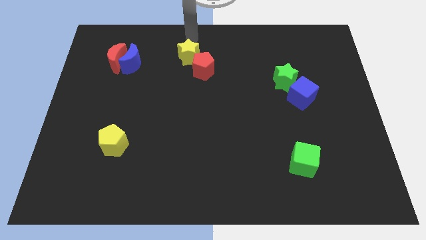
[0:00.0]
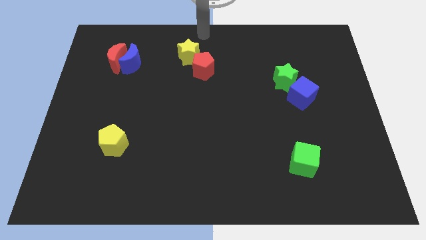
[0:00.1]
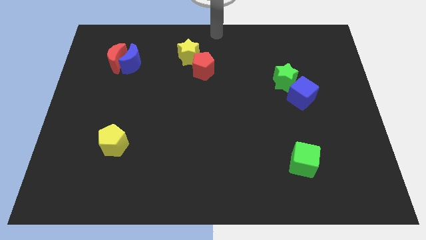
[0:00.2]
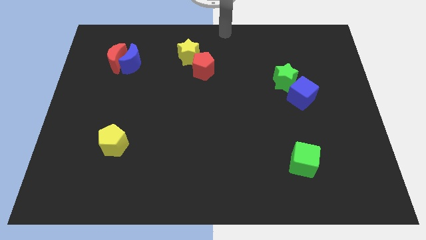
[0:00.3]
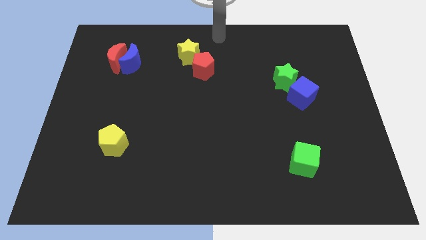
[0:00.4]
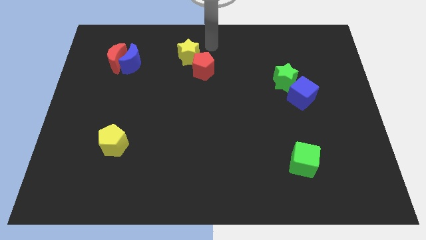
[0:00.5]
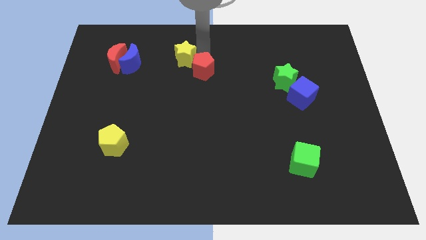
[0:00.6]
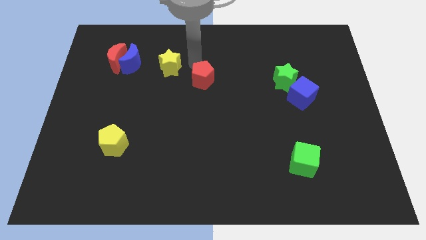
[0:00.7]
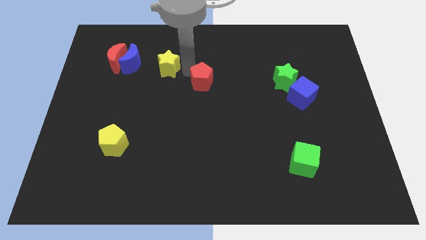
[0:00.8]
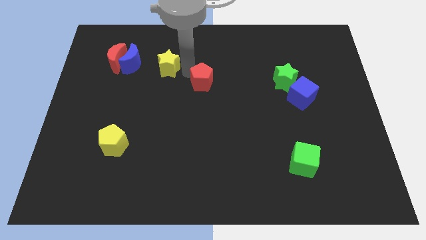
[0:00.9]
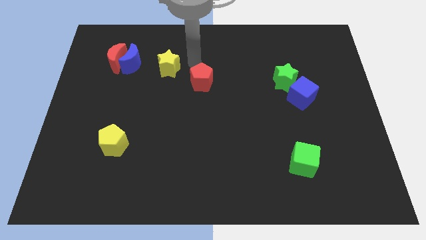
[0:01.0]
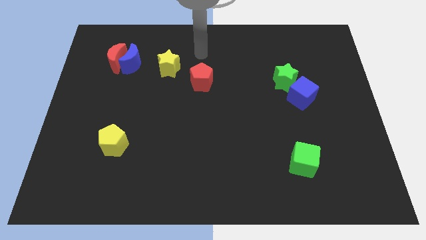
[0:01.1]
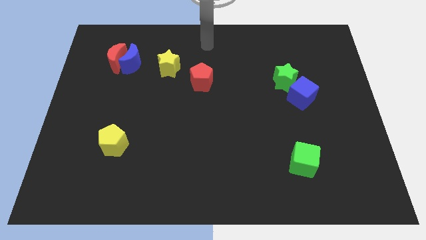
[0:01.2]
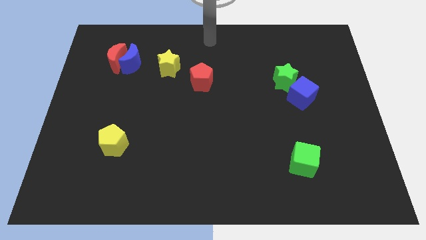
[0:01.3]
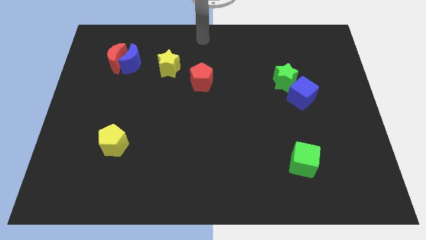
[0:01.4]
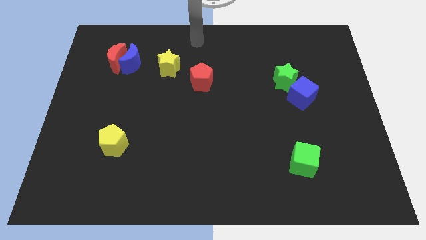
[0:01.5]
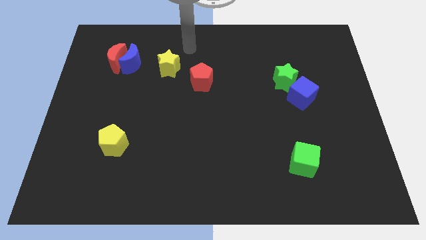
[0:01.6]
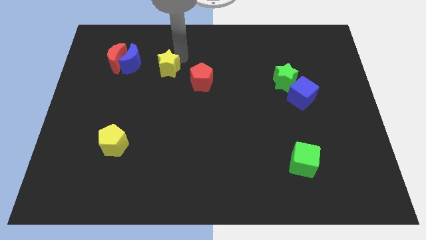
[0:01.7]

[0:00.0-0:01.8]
separate yellow star and the red pentagon from each other

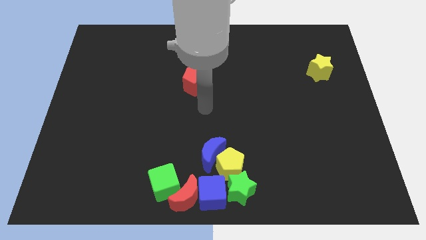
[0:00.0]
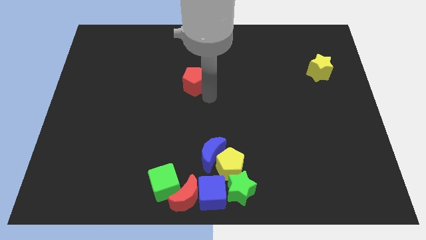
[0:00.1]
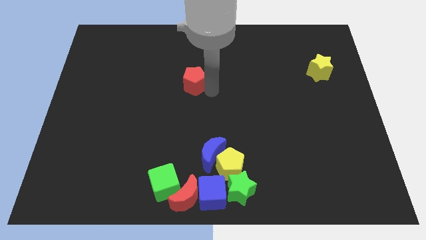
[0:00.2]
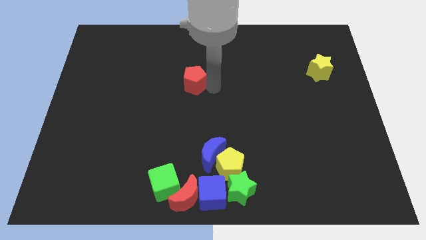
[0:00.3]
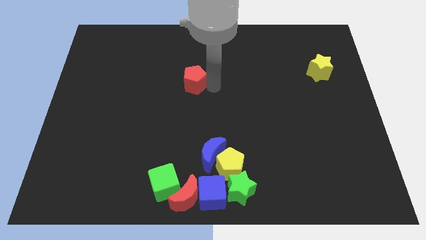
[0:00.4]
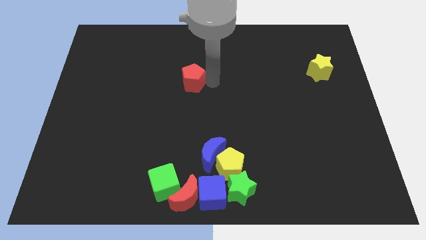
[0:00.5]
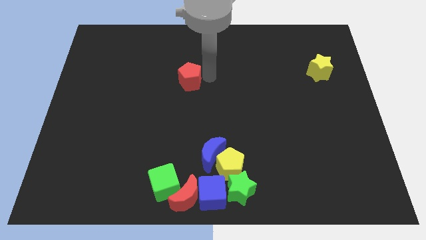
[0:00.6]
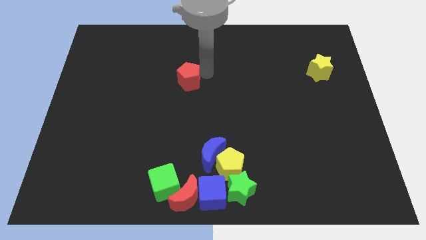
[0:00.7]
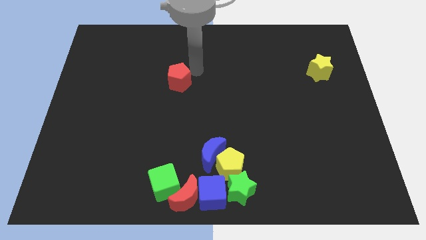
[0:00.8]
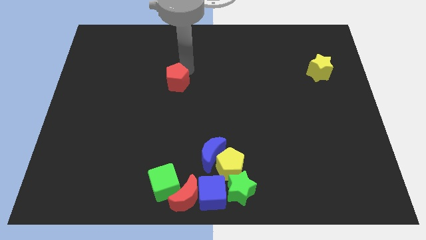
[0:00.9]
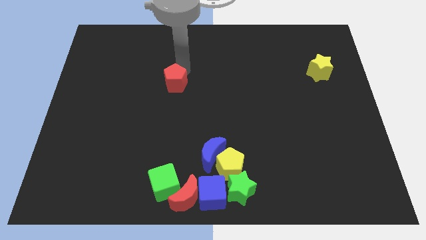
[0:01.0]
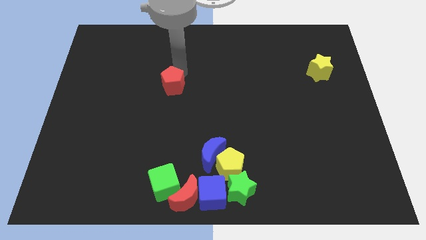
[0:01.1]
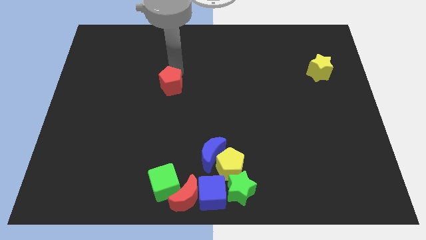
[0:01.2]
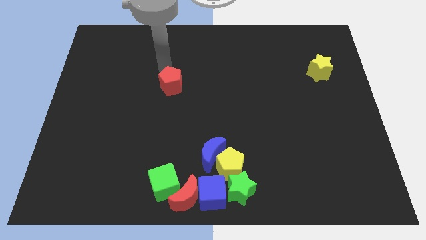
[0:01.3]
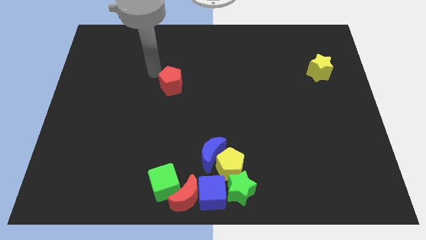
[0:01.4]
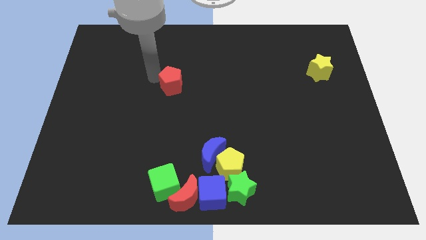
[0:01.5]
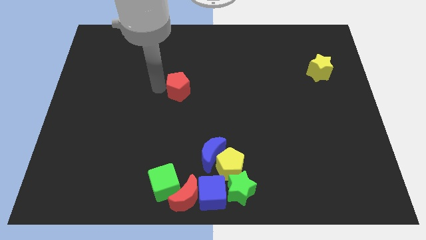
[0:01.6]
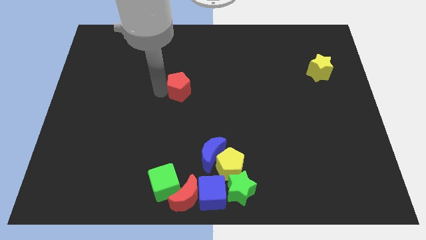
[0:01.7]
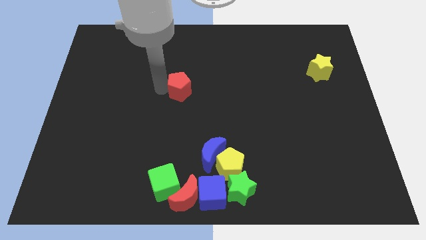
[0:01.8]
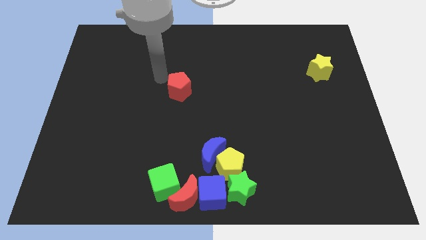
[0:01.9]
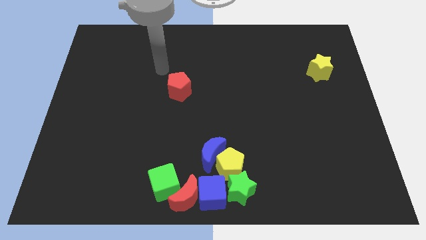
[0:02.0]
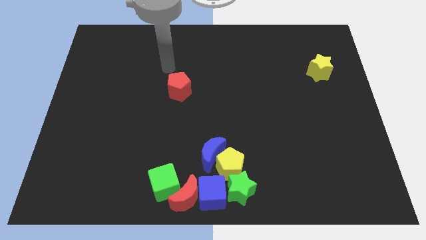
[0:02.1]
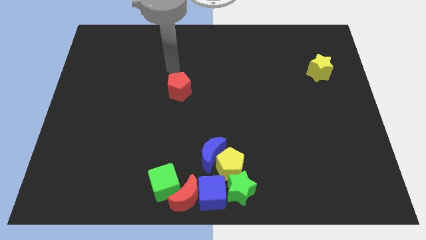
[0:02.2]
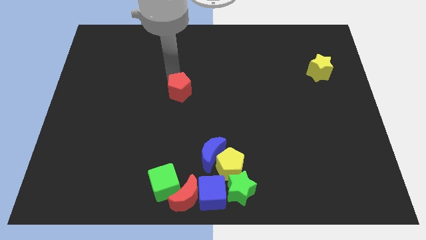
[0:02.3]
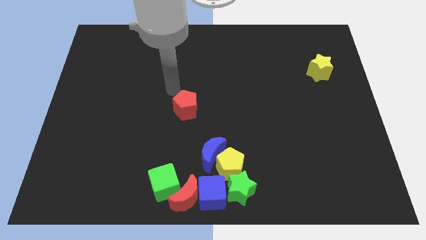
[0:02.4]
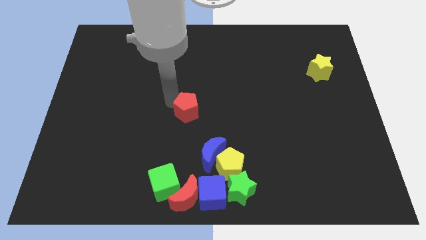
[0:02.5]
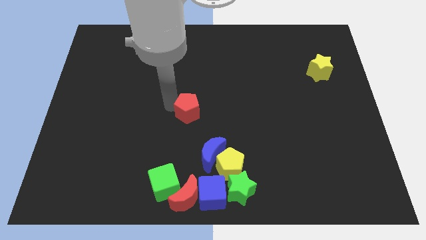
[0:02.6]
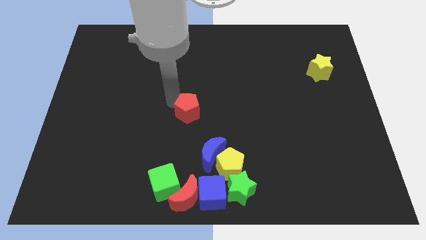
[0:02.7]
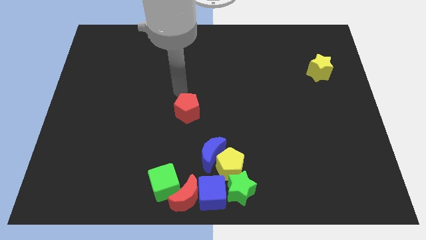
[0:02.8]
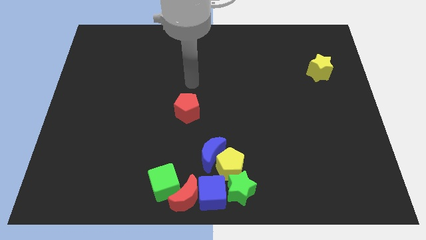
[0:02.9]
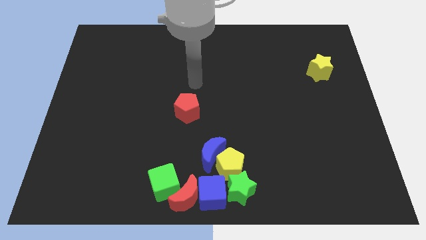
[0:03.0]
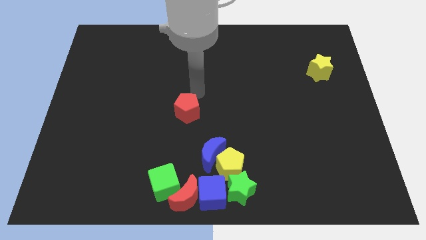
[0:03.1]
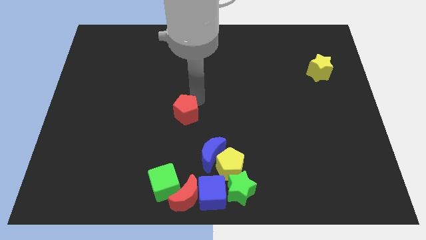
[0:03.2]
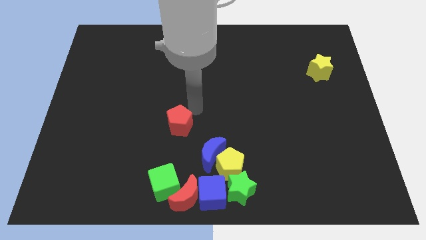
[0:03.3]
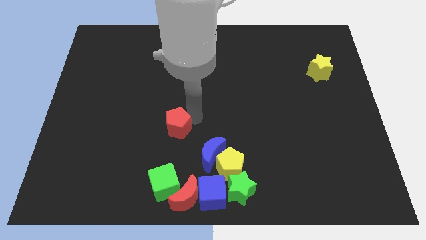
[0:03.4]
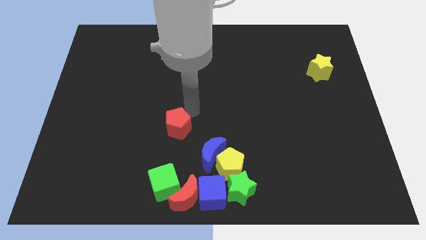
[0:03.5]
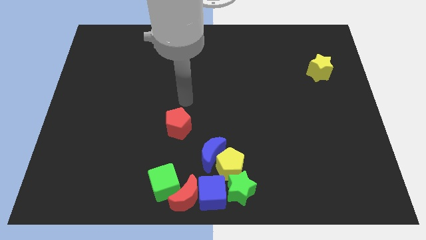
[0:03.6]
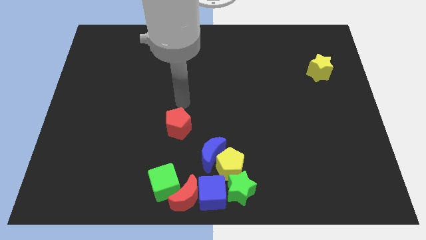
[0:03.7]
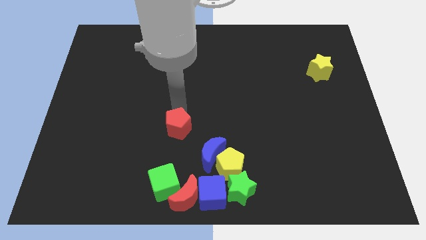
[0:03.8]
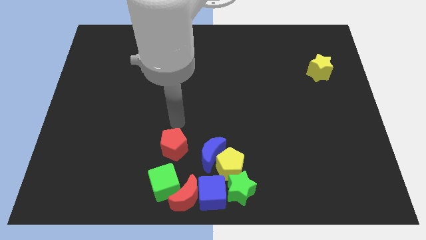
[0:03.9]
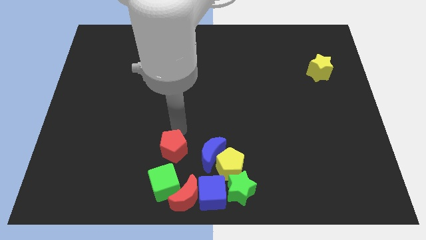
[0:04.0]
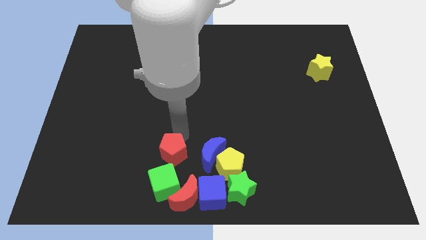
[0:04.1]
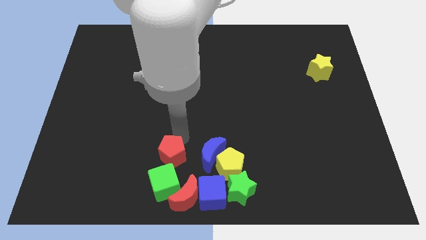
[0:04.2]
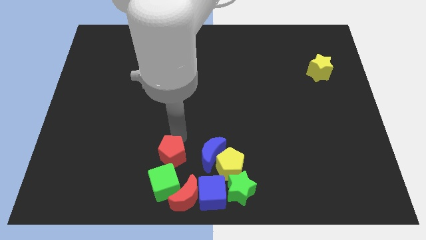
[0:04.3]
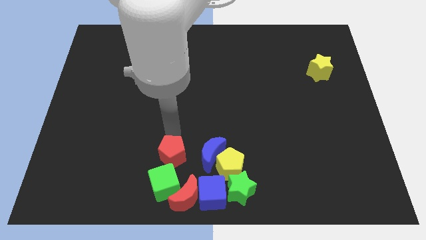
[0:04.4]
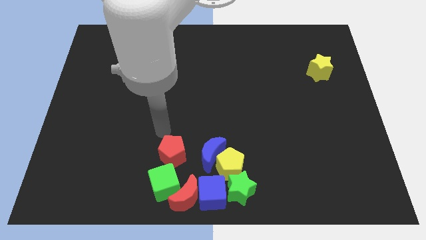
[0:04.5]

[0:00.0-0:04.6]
put the red pentagon parallel left to the blue crescent

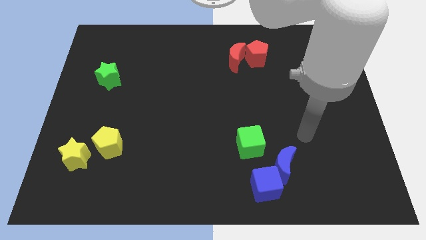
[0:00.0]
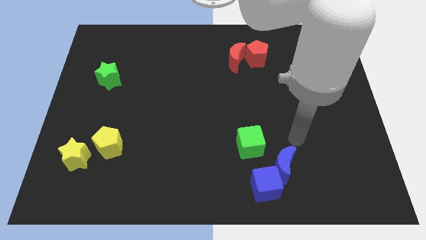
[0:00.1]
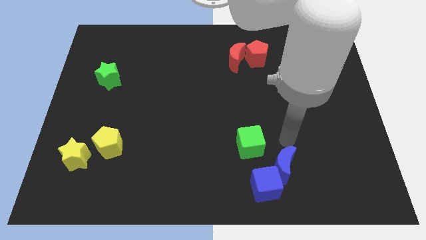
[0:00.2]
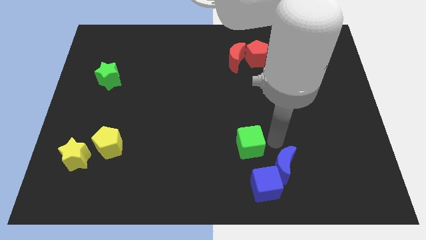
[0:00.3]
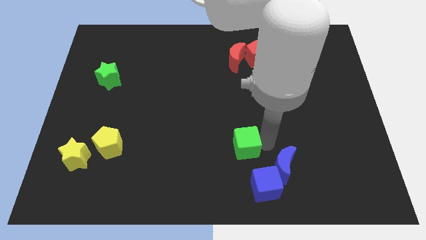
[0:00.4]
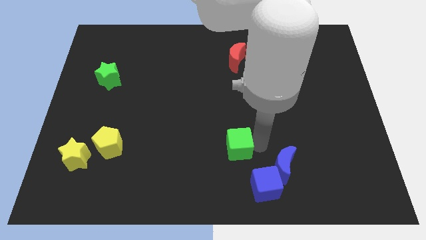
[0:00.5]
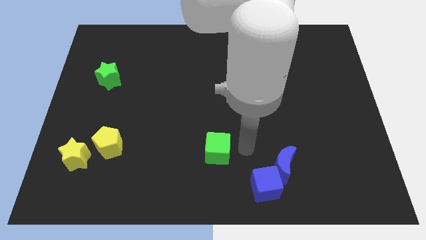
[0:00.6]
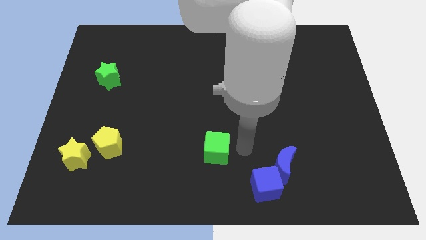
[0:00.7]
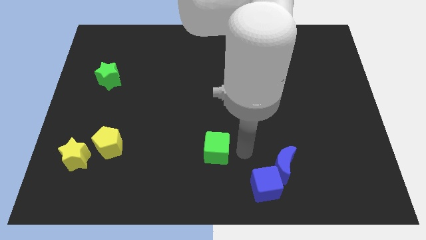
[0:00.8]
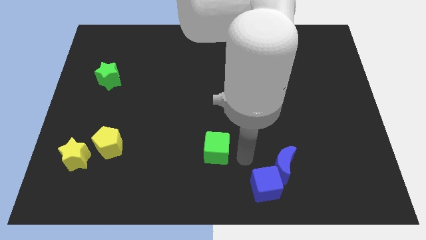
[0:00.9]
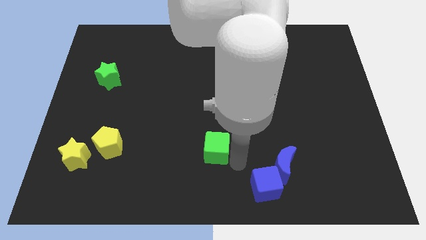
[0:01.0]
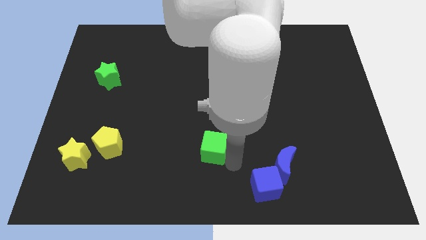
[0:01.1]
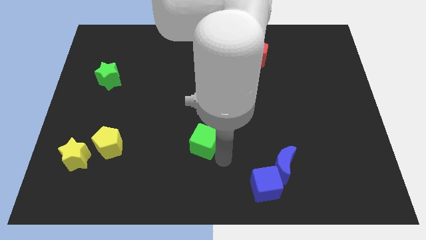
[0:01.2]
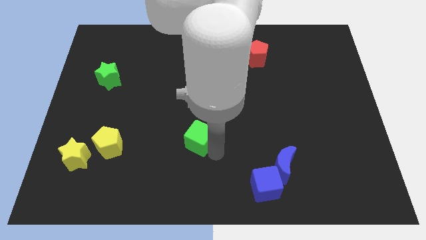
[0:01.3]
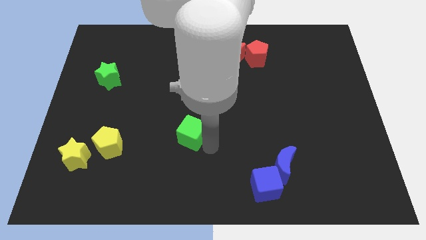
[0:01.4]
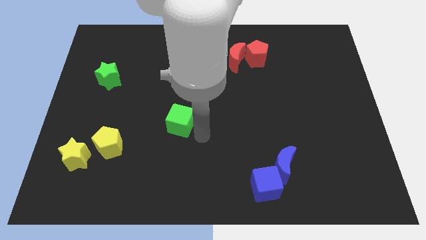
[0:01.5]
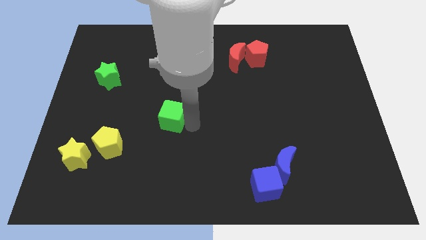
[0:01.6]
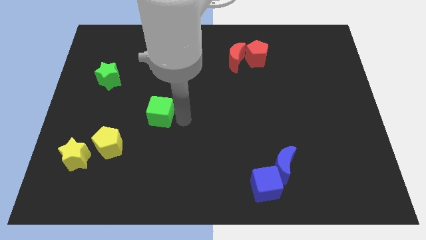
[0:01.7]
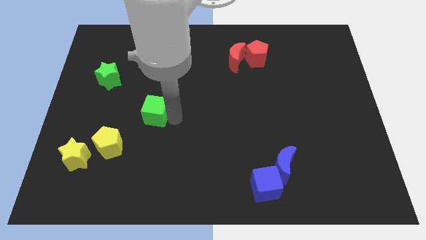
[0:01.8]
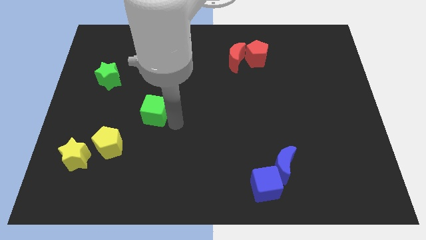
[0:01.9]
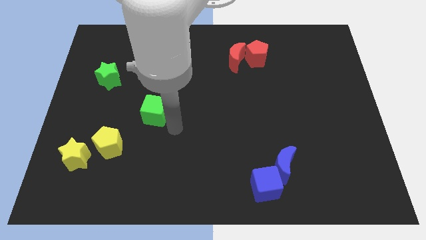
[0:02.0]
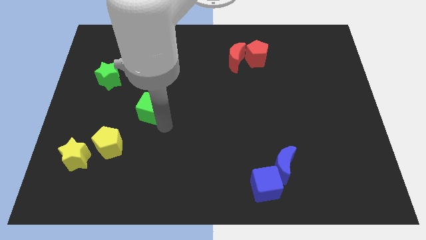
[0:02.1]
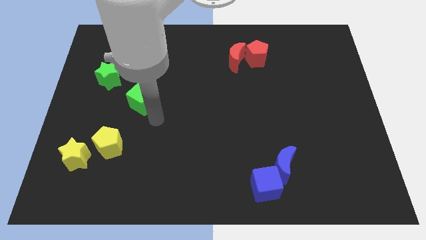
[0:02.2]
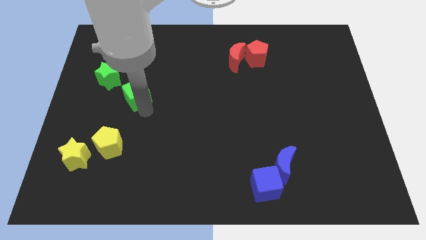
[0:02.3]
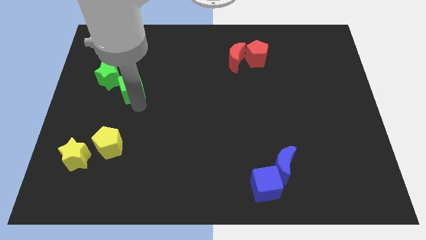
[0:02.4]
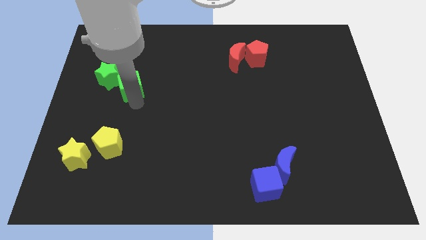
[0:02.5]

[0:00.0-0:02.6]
push green cube towards green star

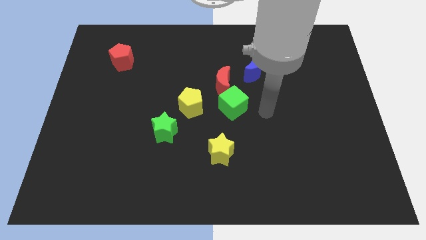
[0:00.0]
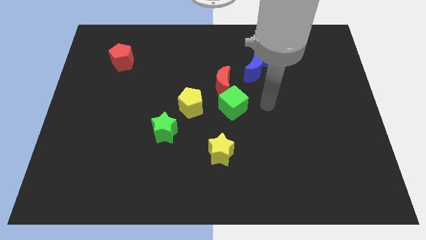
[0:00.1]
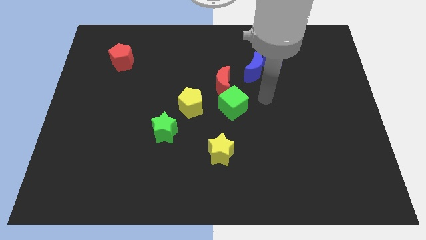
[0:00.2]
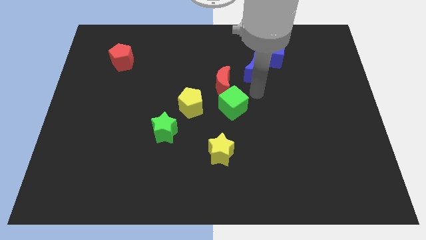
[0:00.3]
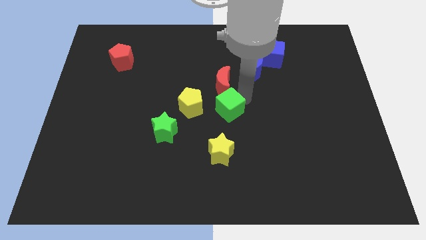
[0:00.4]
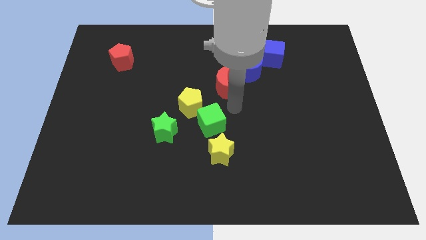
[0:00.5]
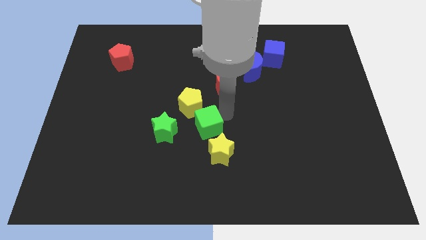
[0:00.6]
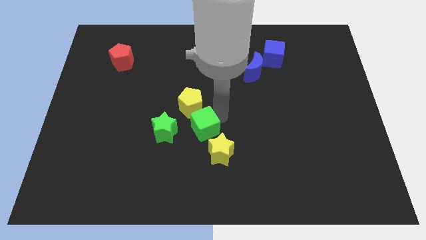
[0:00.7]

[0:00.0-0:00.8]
place the green cube between the yellow color blocks
